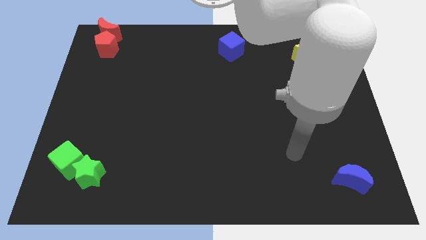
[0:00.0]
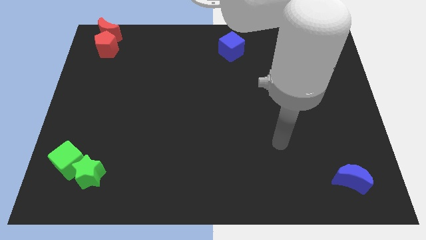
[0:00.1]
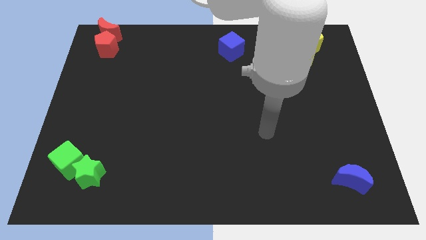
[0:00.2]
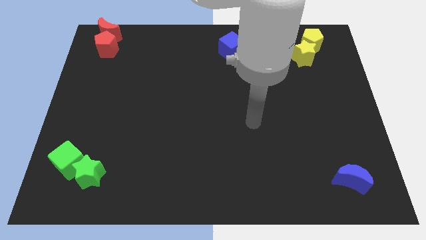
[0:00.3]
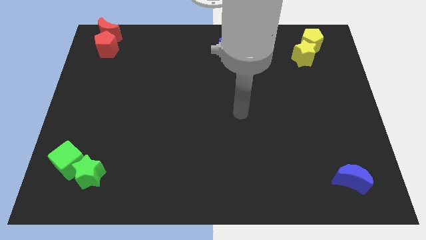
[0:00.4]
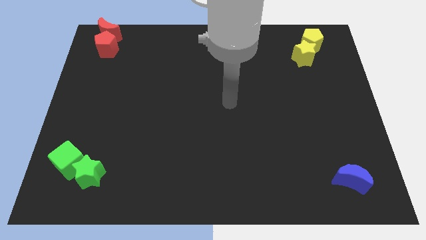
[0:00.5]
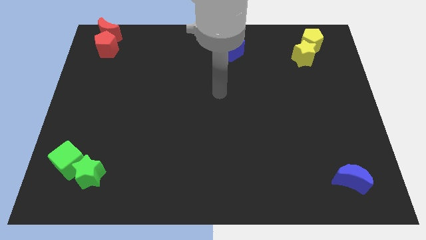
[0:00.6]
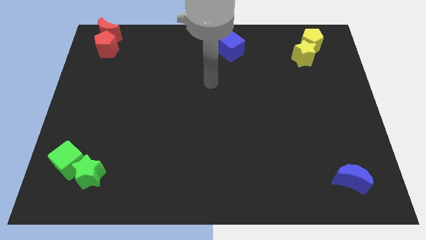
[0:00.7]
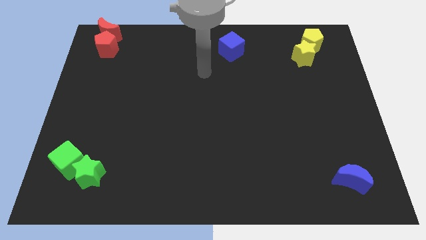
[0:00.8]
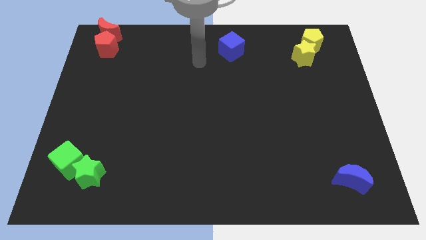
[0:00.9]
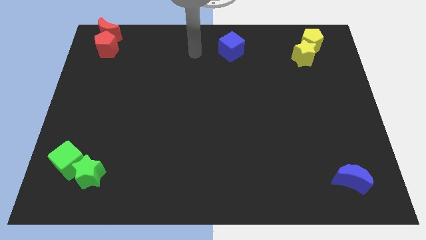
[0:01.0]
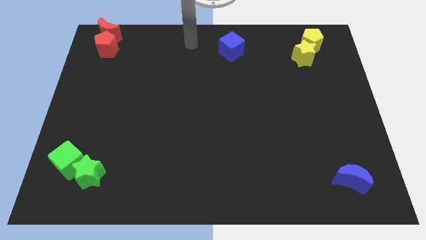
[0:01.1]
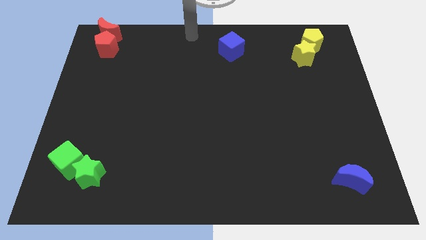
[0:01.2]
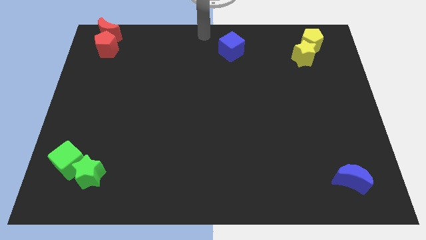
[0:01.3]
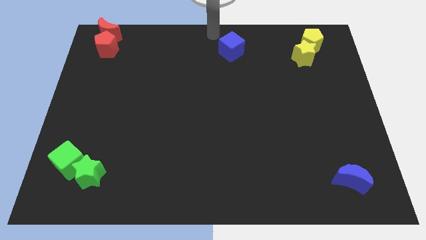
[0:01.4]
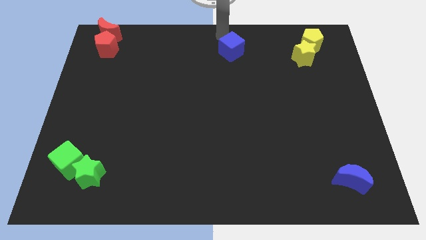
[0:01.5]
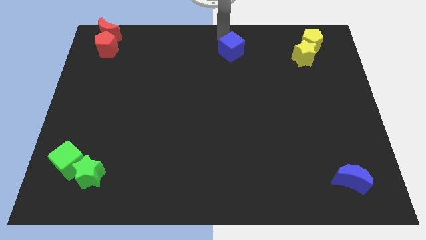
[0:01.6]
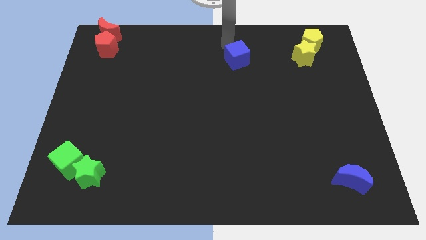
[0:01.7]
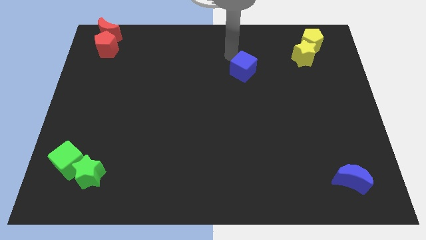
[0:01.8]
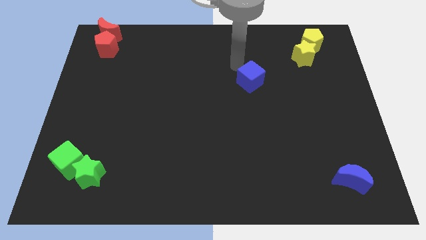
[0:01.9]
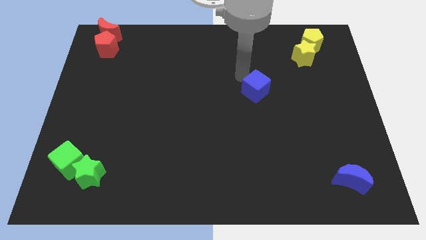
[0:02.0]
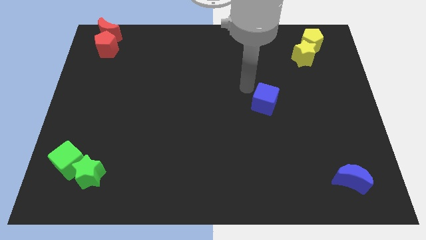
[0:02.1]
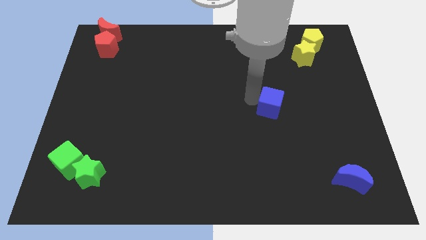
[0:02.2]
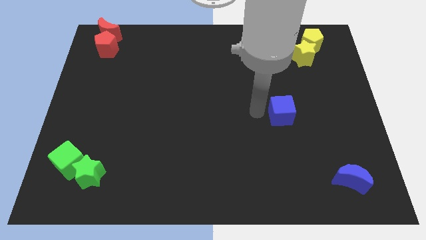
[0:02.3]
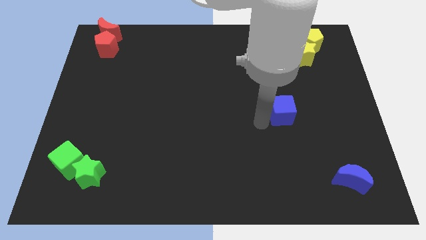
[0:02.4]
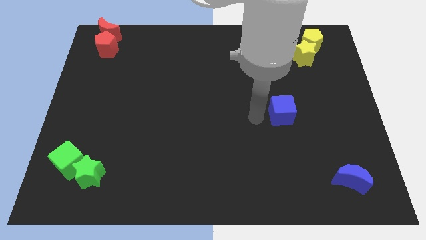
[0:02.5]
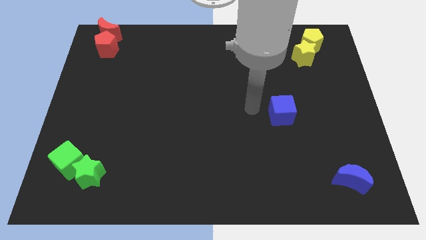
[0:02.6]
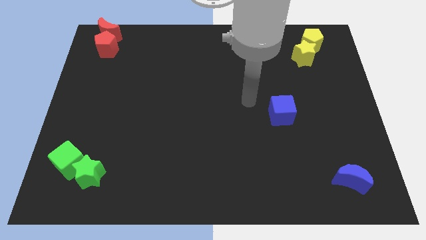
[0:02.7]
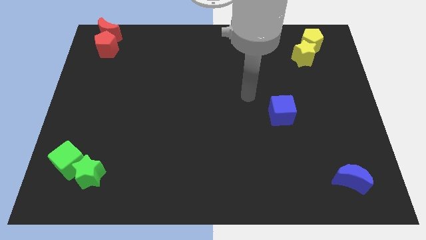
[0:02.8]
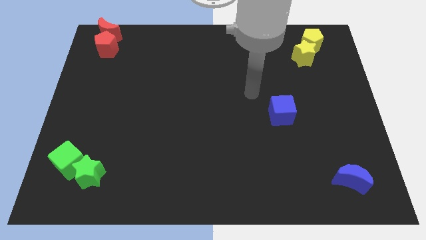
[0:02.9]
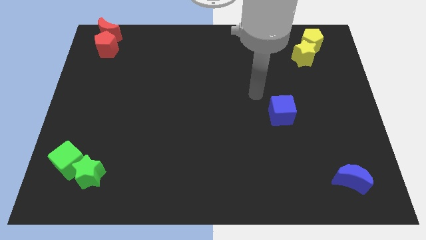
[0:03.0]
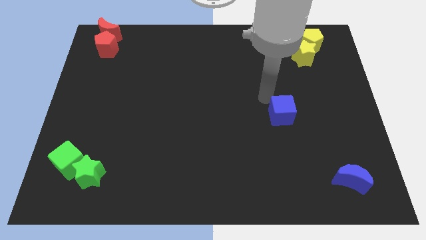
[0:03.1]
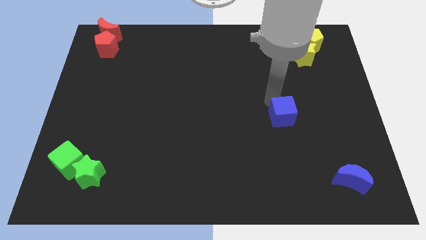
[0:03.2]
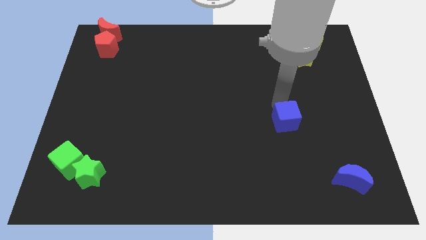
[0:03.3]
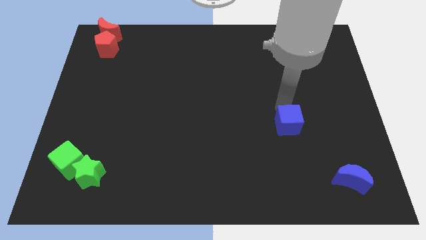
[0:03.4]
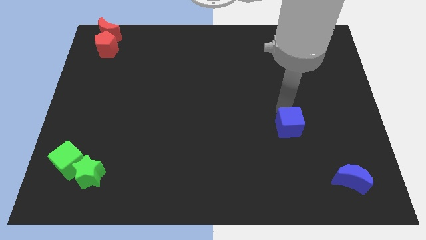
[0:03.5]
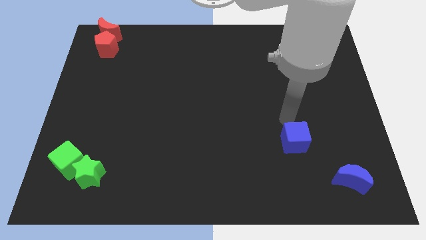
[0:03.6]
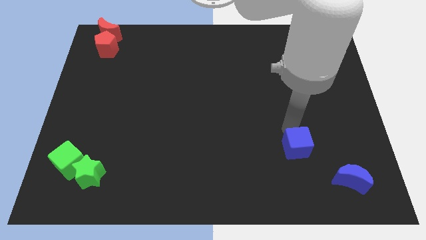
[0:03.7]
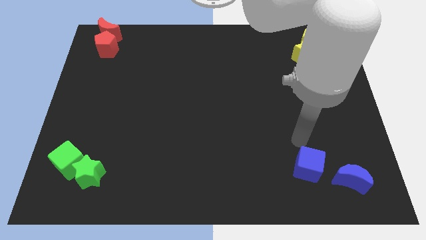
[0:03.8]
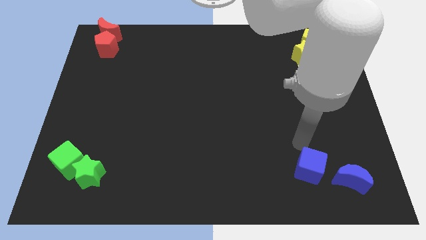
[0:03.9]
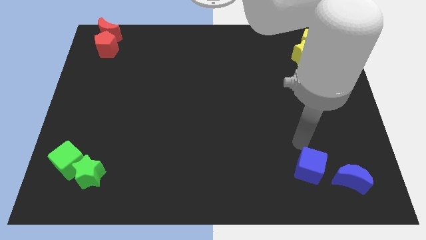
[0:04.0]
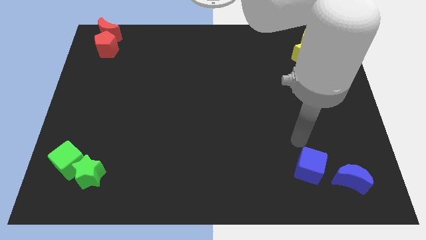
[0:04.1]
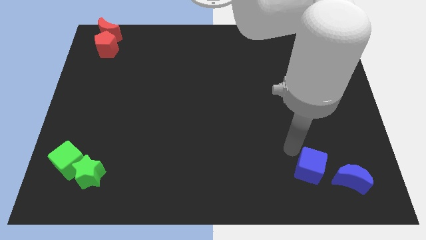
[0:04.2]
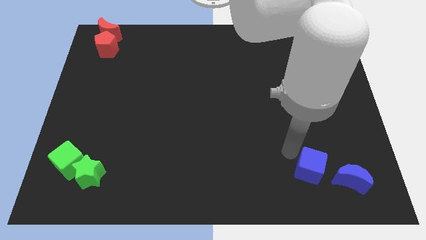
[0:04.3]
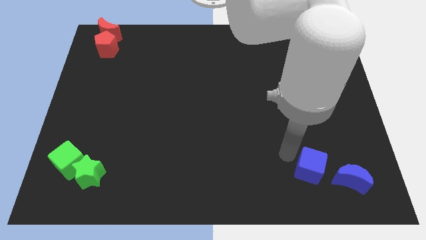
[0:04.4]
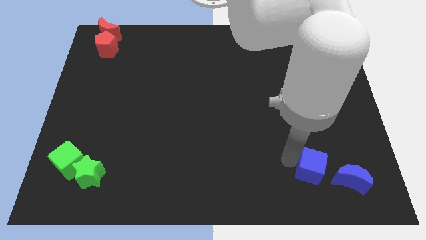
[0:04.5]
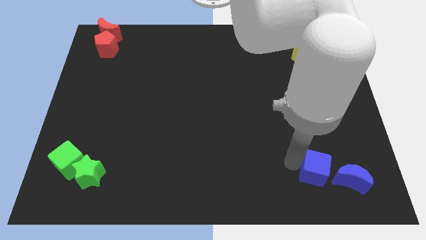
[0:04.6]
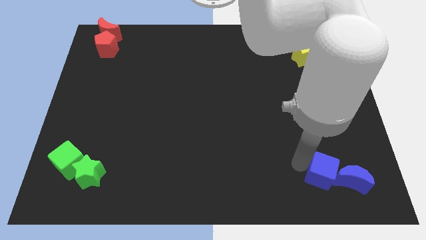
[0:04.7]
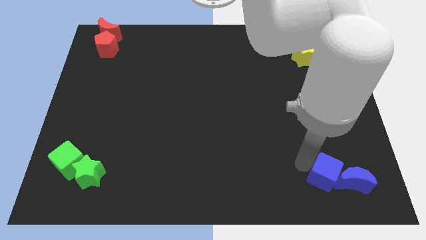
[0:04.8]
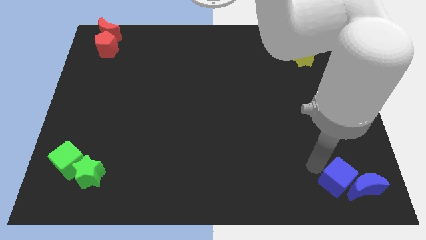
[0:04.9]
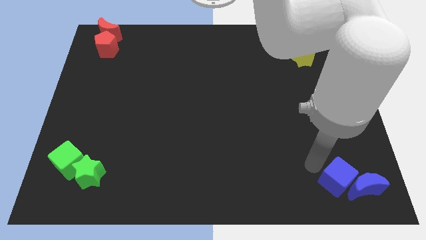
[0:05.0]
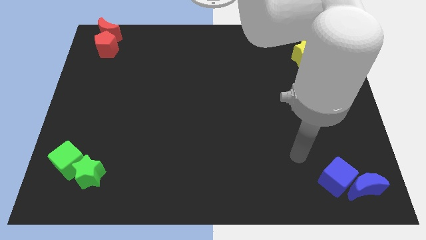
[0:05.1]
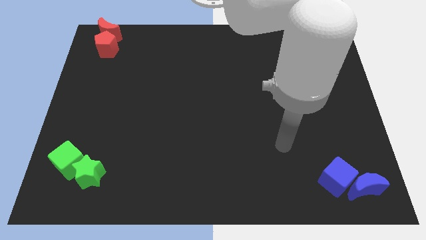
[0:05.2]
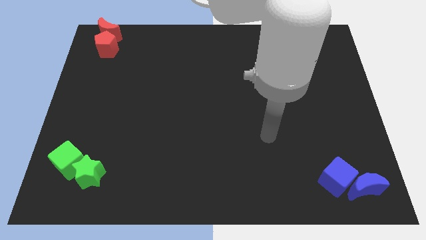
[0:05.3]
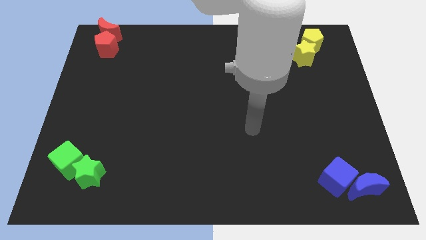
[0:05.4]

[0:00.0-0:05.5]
reposition the blue cube left to the blue crescent

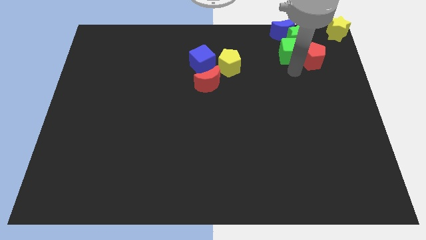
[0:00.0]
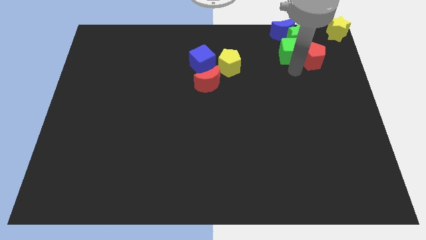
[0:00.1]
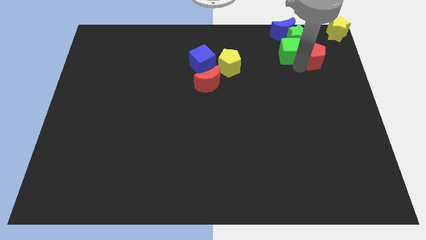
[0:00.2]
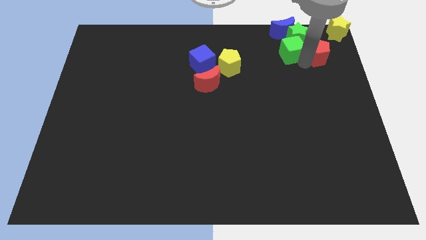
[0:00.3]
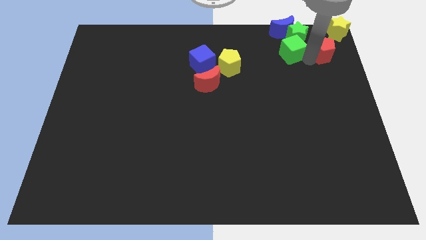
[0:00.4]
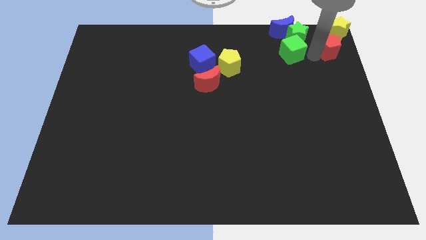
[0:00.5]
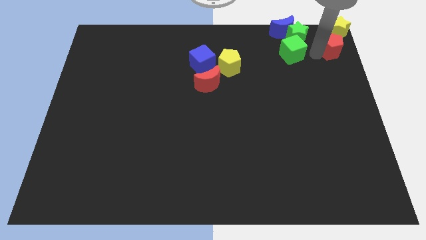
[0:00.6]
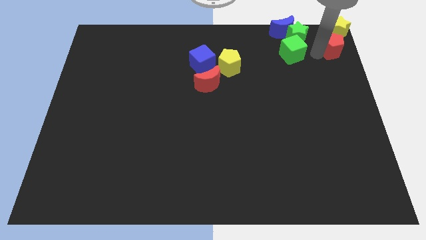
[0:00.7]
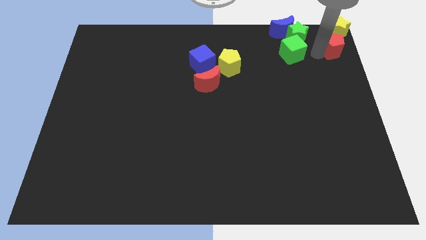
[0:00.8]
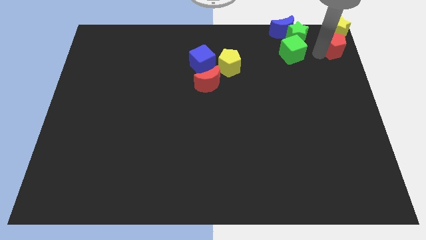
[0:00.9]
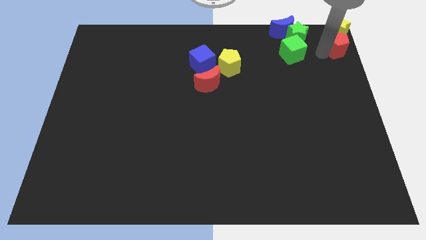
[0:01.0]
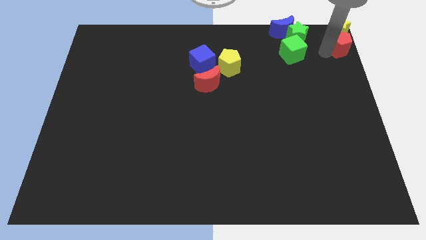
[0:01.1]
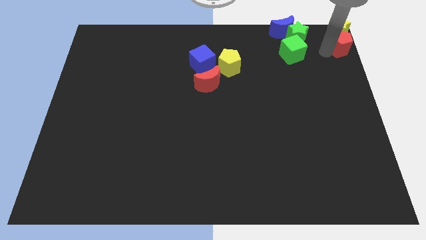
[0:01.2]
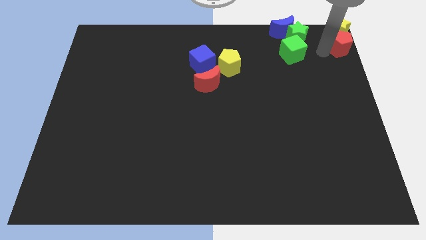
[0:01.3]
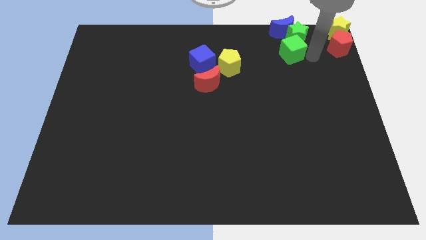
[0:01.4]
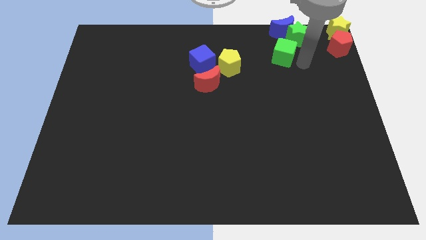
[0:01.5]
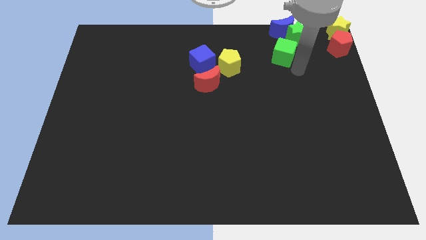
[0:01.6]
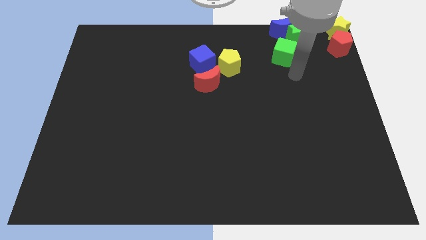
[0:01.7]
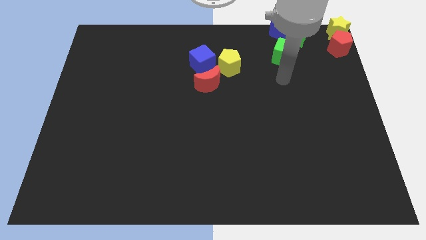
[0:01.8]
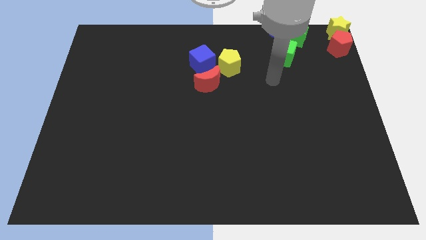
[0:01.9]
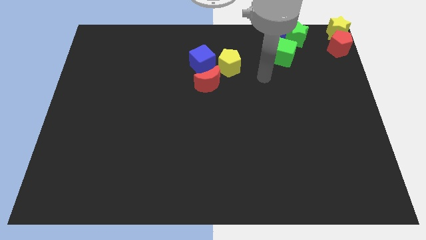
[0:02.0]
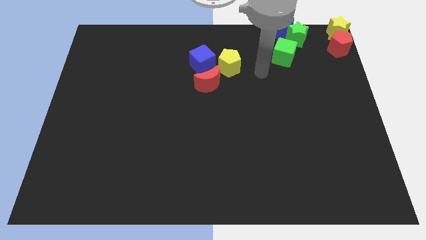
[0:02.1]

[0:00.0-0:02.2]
move the red pentagon below the yellow star

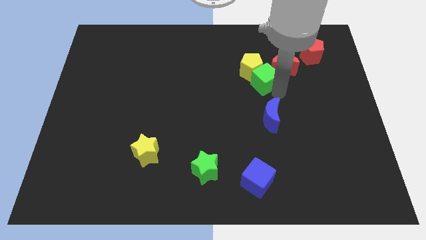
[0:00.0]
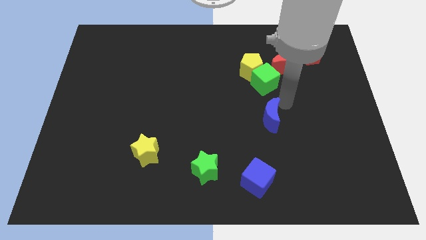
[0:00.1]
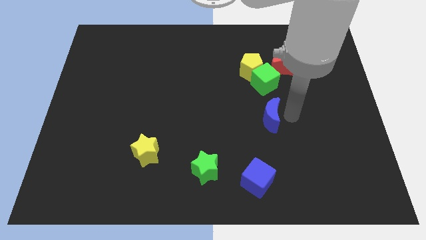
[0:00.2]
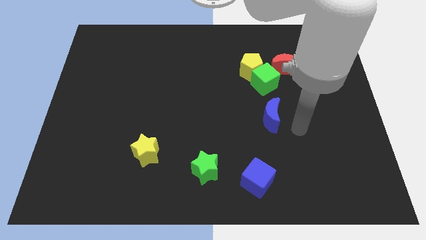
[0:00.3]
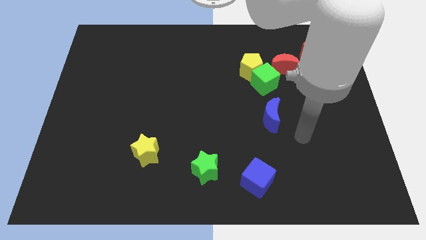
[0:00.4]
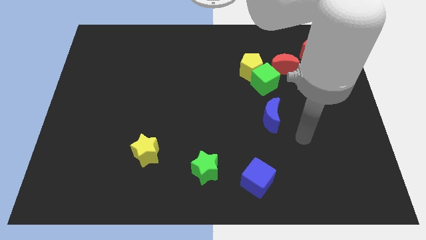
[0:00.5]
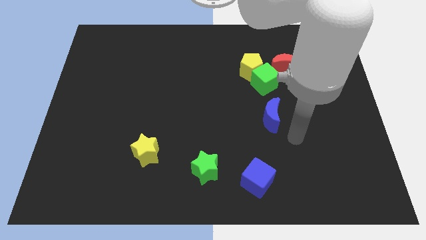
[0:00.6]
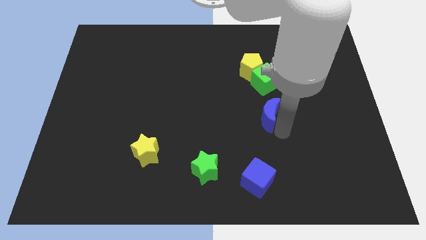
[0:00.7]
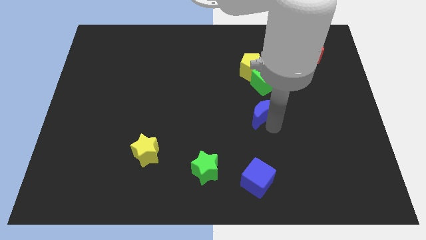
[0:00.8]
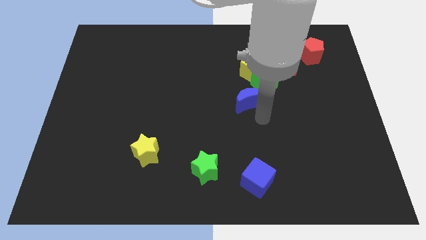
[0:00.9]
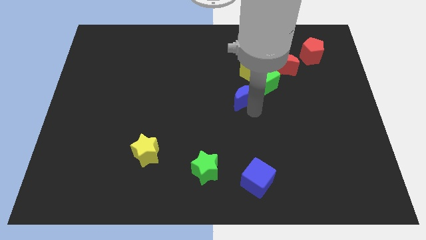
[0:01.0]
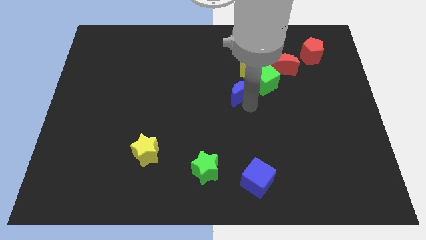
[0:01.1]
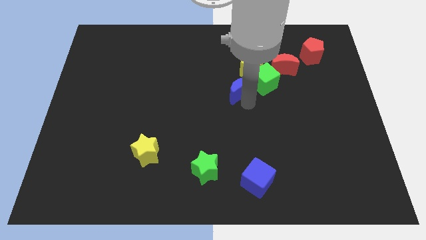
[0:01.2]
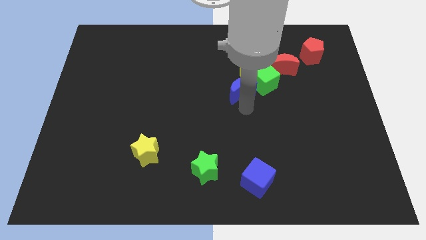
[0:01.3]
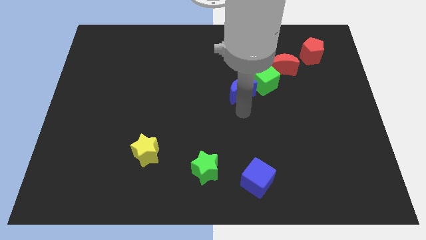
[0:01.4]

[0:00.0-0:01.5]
place blue crescent to the left of green cube
